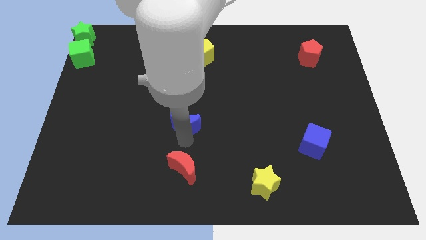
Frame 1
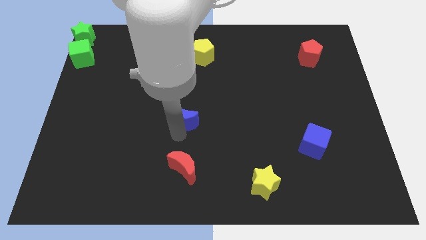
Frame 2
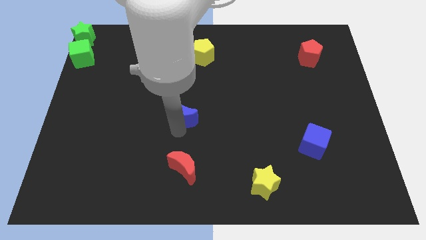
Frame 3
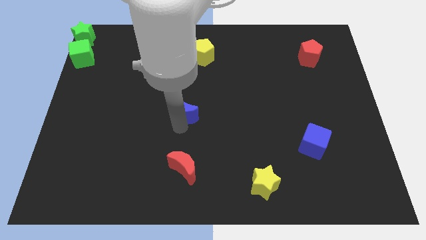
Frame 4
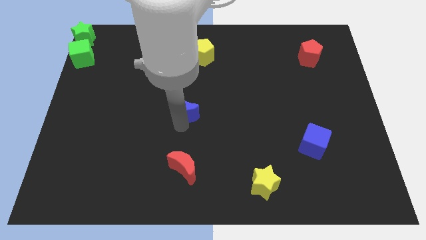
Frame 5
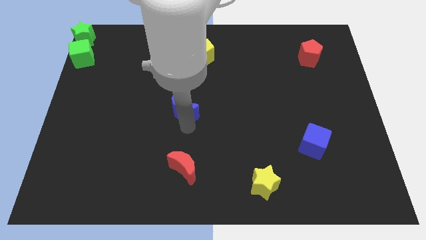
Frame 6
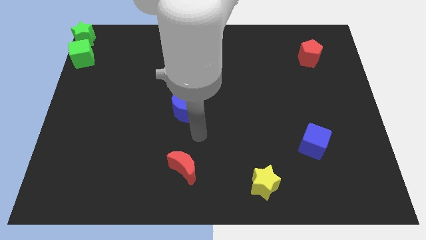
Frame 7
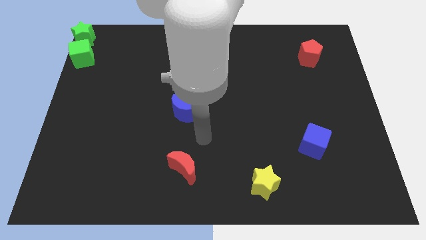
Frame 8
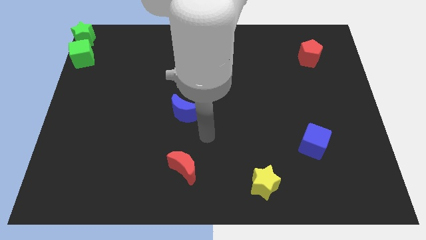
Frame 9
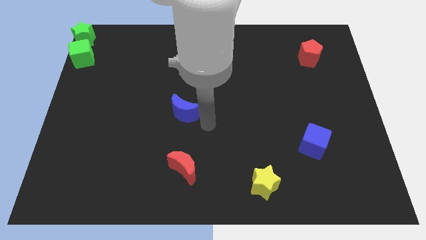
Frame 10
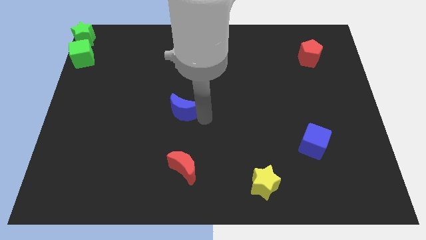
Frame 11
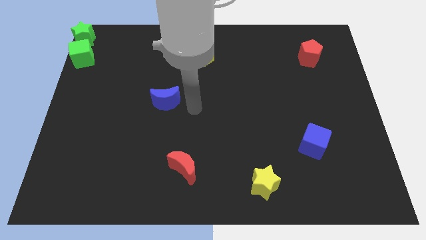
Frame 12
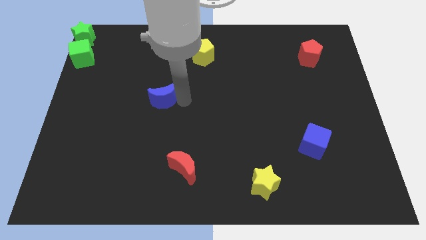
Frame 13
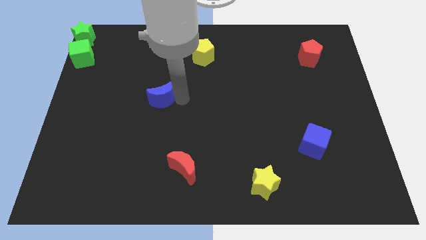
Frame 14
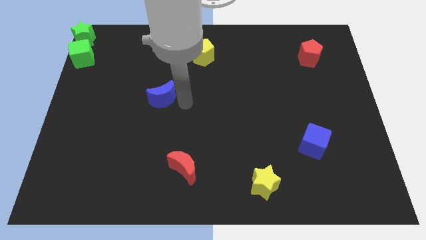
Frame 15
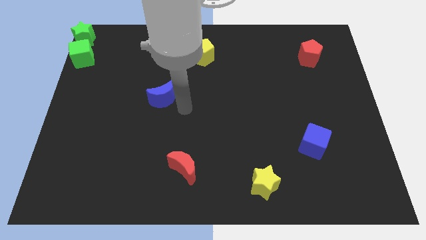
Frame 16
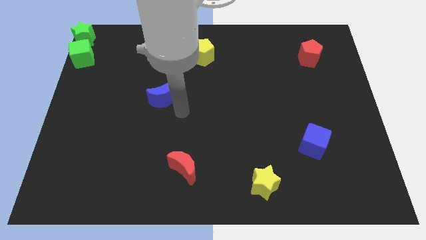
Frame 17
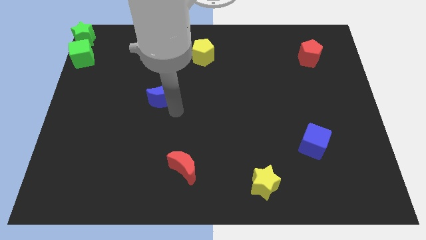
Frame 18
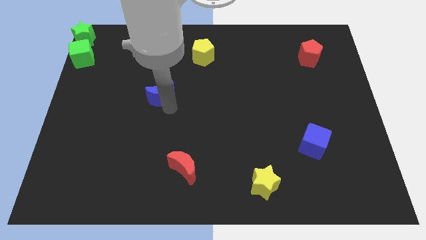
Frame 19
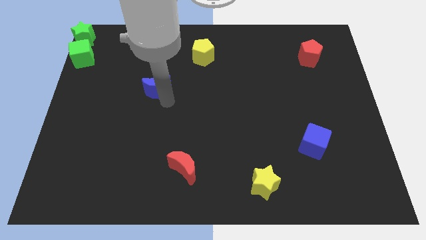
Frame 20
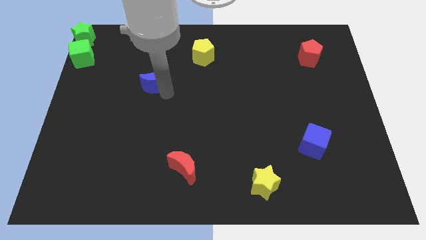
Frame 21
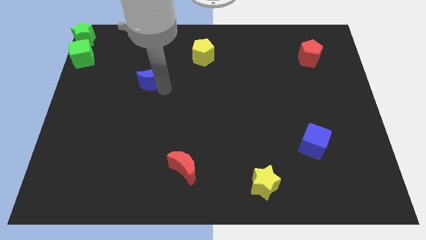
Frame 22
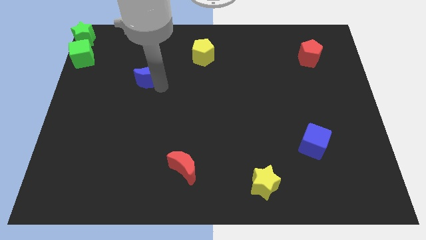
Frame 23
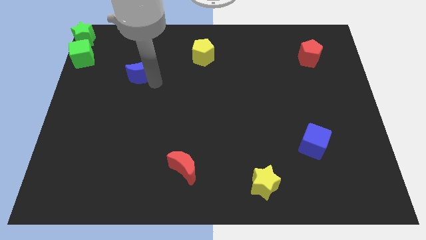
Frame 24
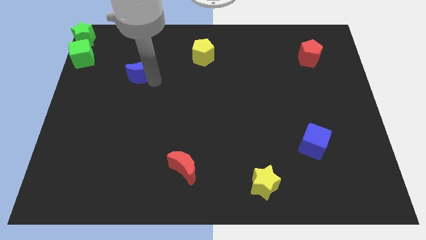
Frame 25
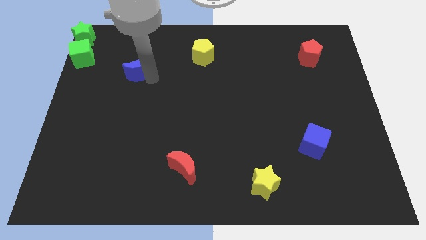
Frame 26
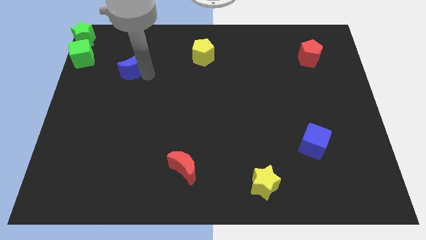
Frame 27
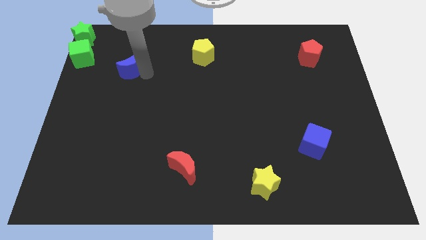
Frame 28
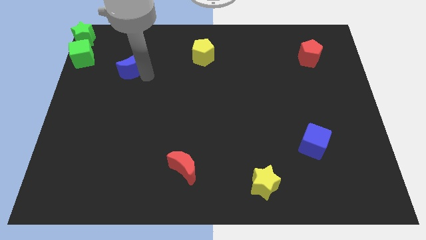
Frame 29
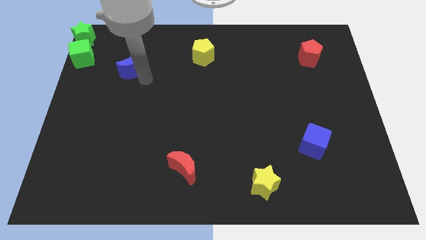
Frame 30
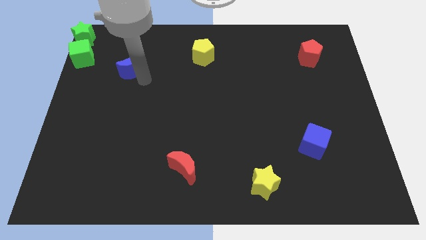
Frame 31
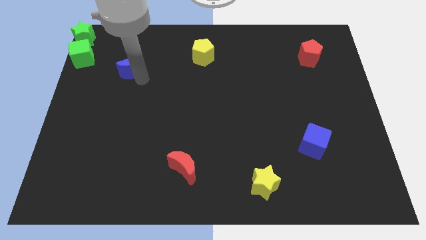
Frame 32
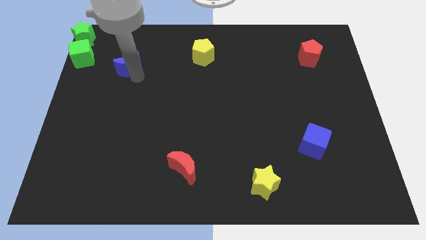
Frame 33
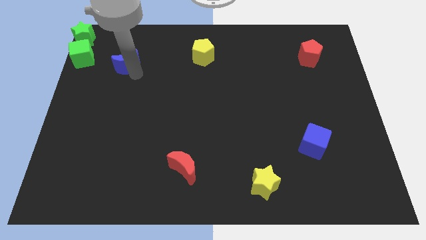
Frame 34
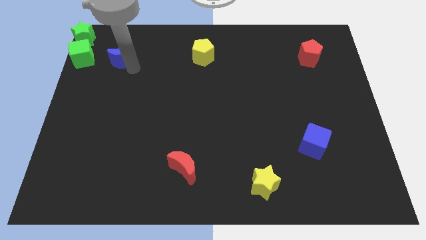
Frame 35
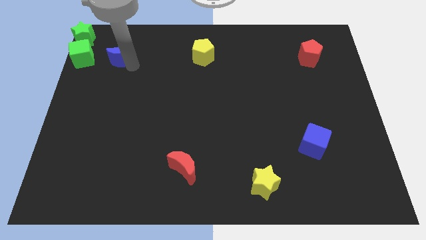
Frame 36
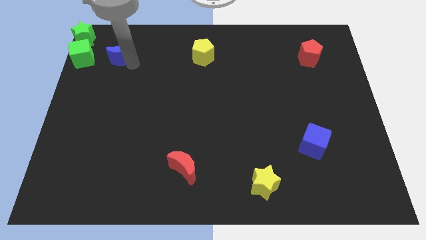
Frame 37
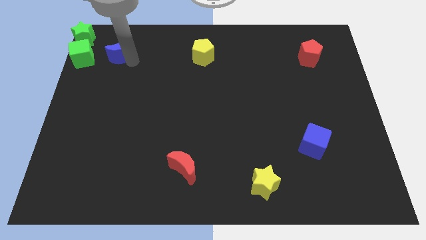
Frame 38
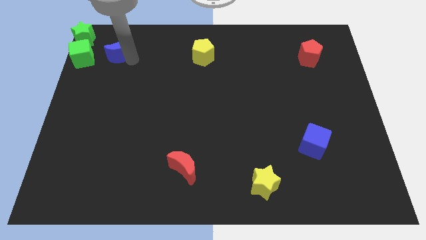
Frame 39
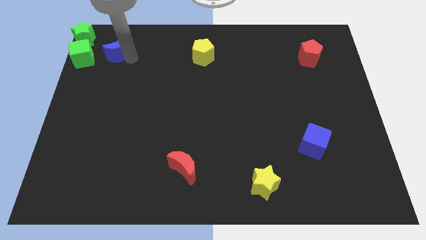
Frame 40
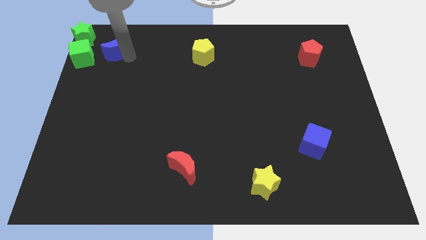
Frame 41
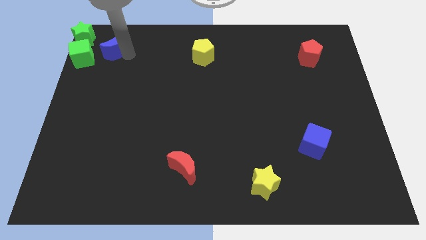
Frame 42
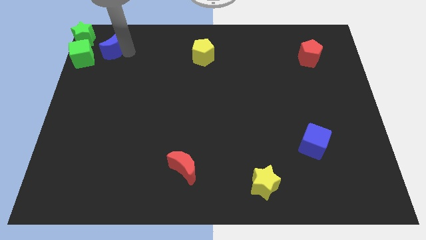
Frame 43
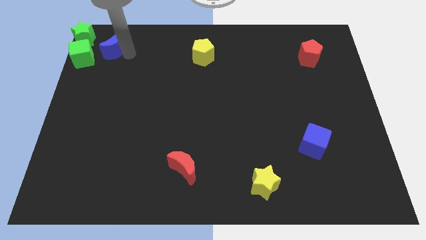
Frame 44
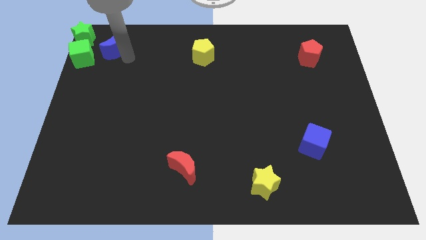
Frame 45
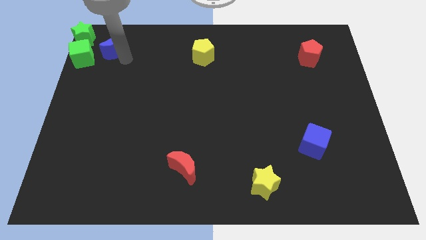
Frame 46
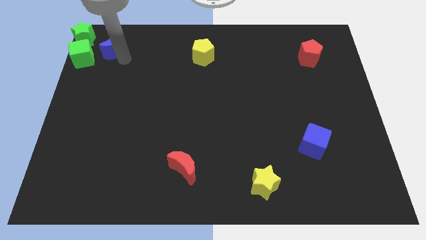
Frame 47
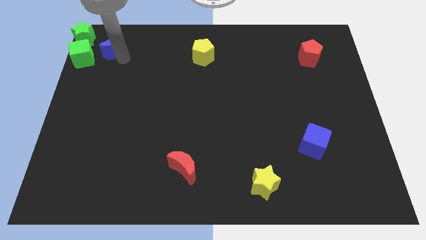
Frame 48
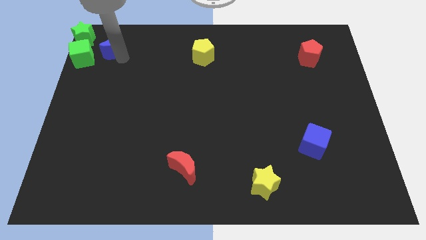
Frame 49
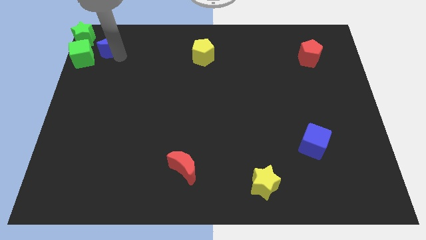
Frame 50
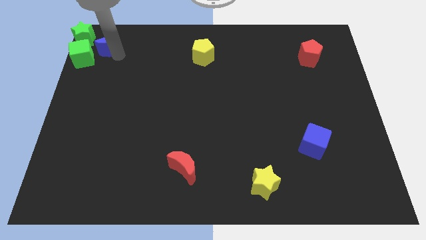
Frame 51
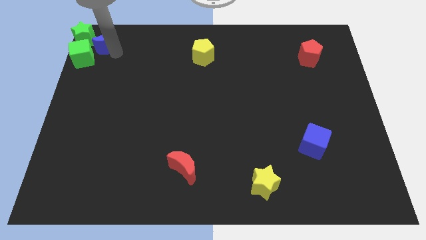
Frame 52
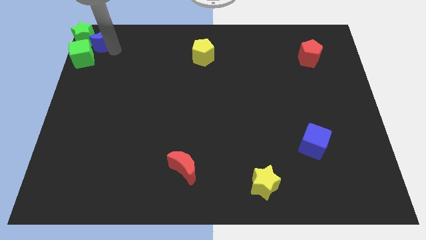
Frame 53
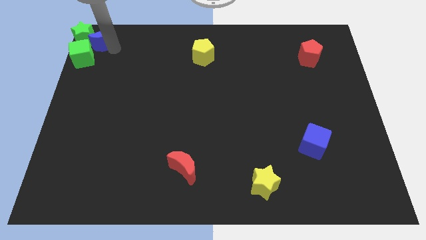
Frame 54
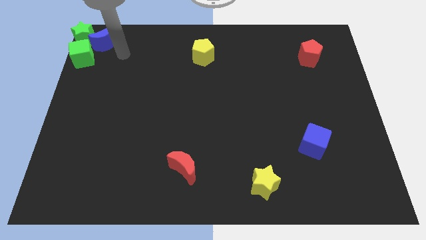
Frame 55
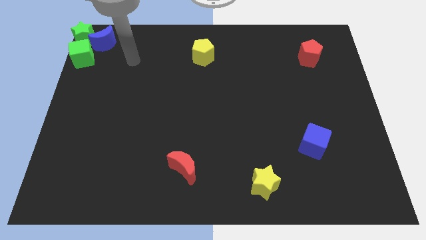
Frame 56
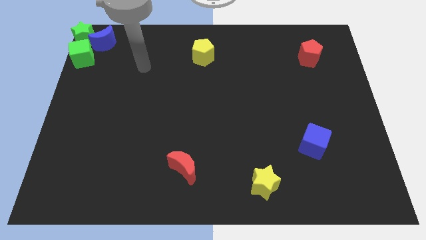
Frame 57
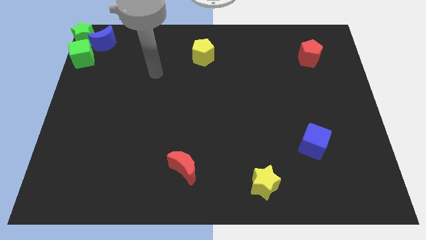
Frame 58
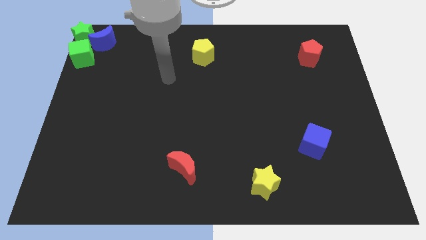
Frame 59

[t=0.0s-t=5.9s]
move the blue crescent to the top left corner of the board

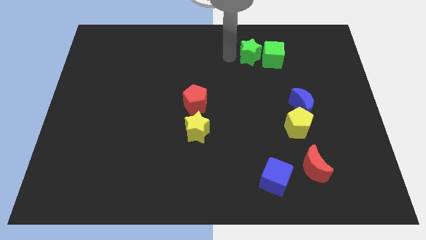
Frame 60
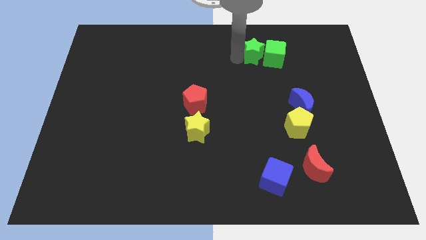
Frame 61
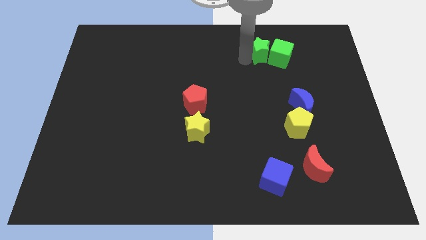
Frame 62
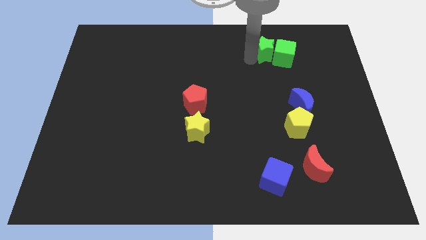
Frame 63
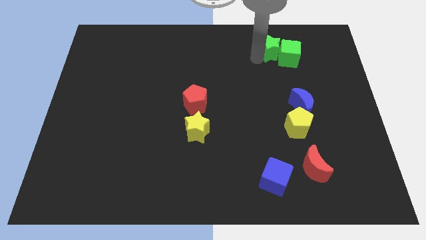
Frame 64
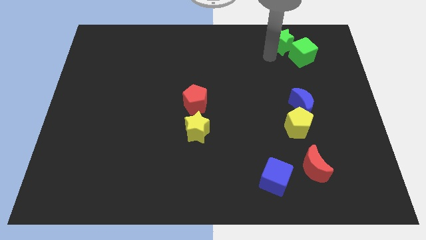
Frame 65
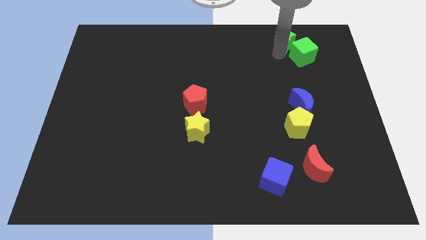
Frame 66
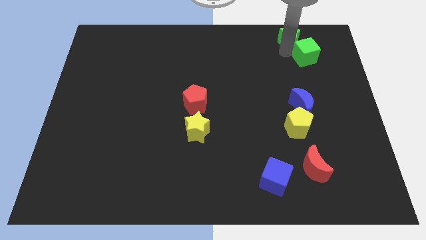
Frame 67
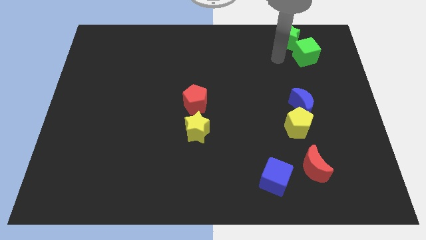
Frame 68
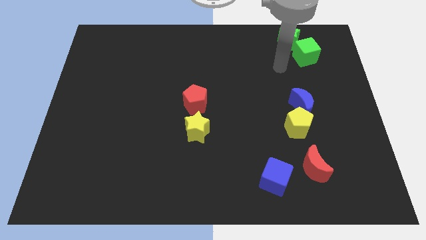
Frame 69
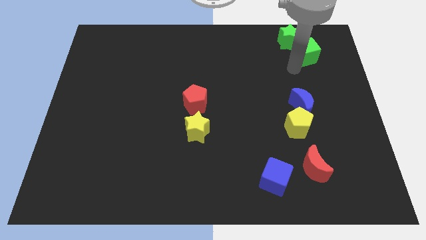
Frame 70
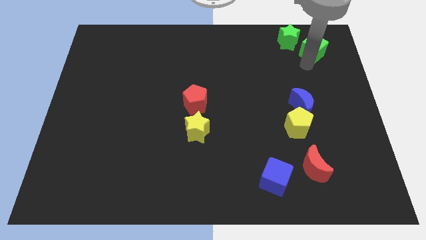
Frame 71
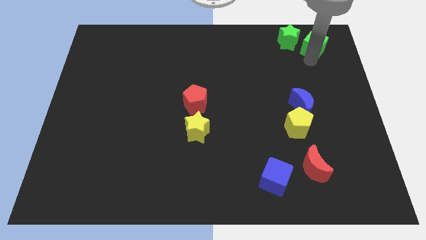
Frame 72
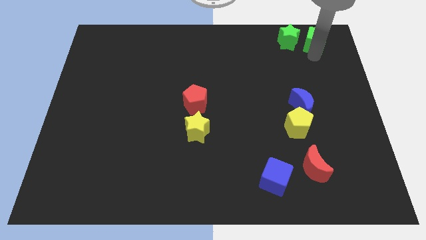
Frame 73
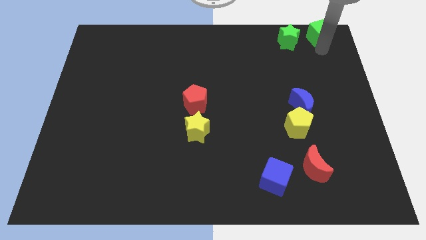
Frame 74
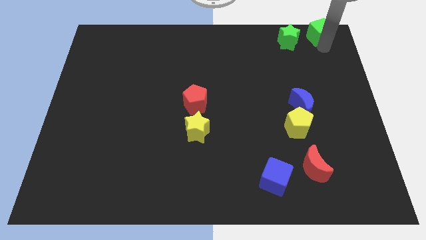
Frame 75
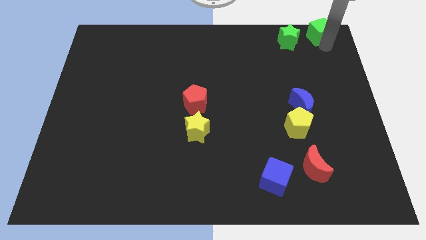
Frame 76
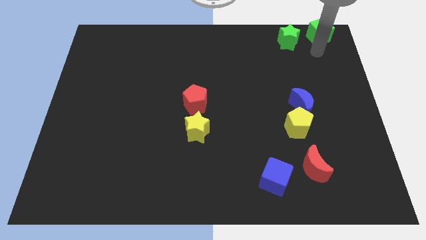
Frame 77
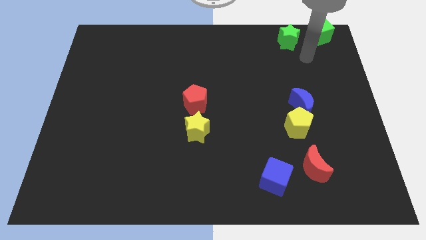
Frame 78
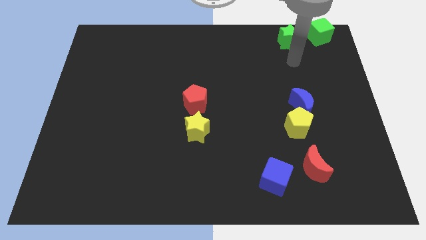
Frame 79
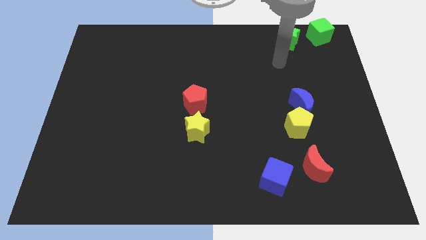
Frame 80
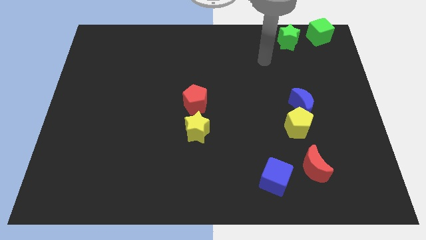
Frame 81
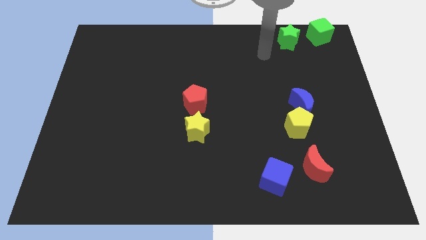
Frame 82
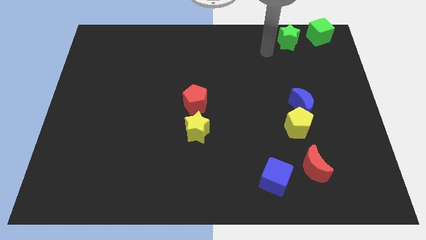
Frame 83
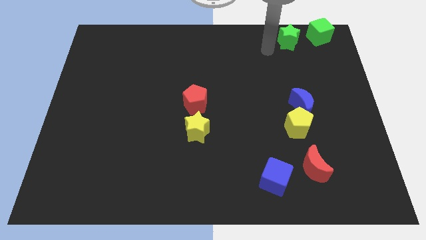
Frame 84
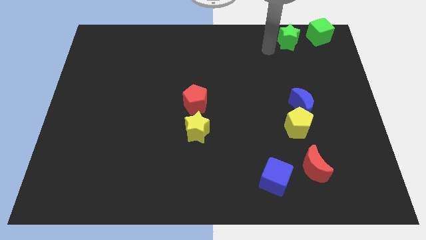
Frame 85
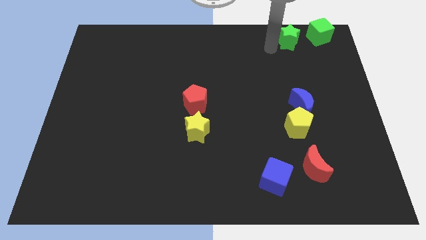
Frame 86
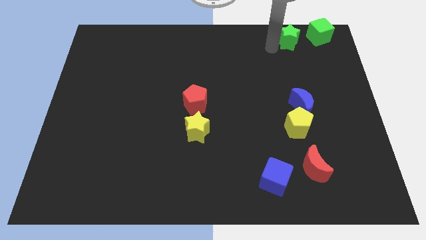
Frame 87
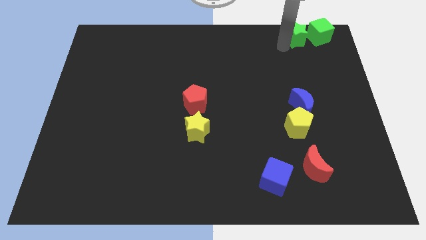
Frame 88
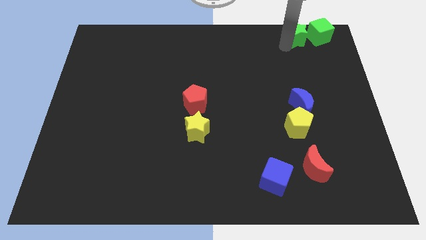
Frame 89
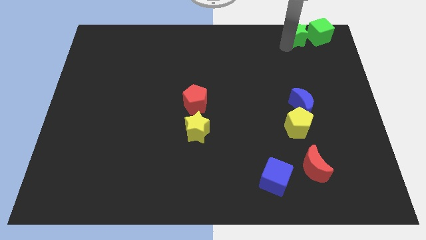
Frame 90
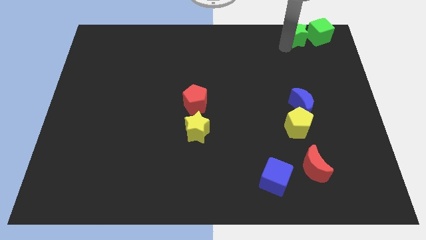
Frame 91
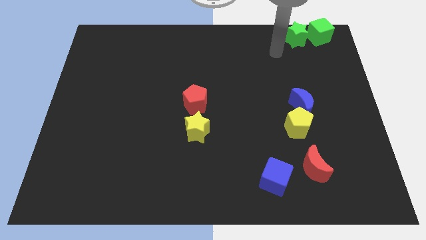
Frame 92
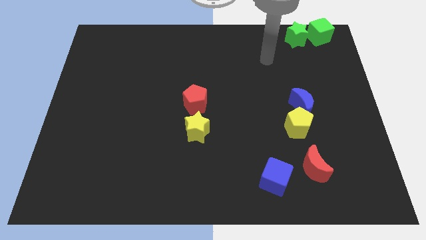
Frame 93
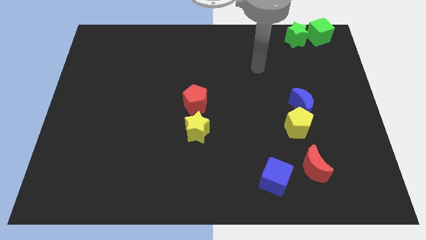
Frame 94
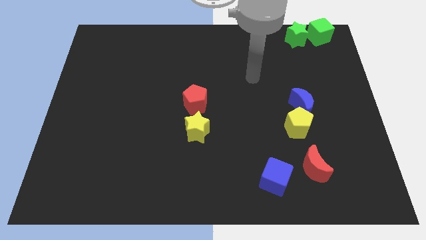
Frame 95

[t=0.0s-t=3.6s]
move the green blocks slightly towards the top right corner of the board
